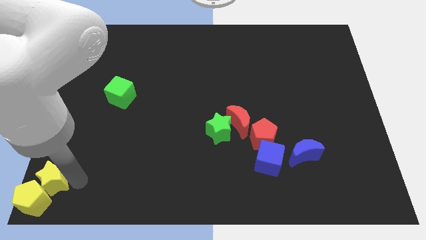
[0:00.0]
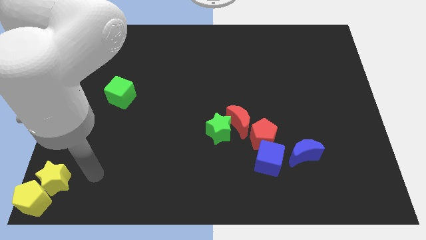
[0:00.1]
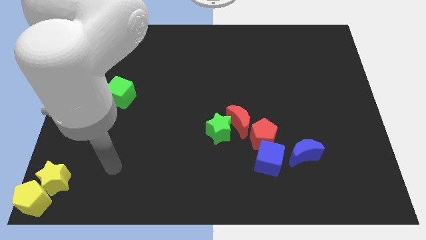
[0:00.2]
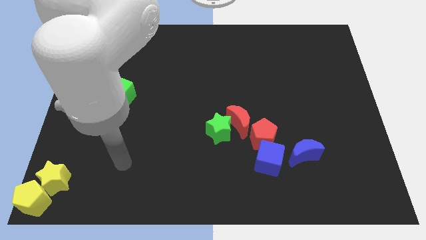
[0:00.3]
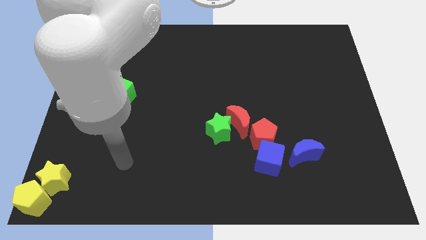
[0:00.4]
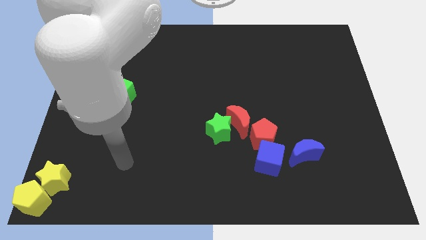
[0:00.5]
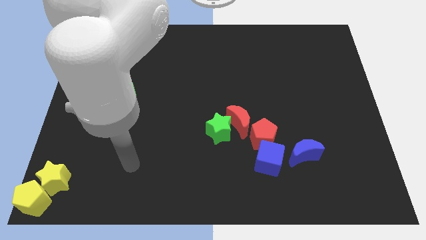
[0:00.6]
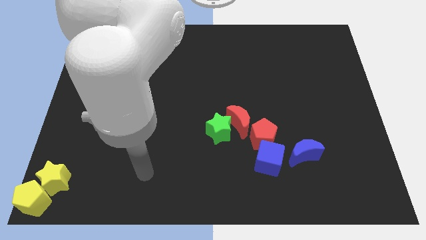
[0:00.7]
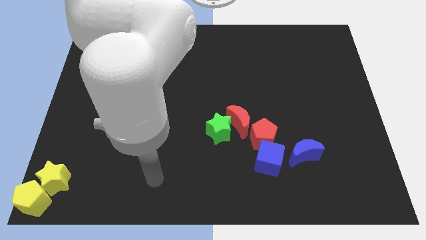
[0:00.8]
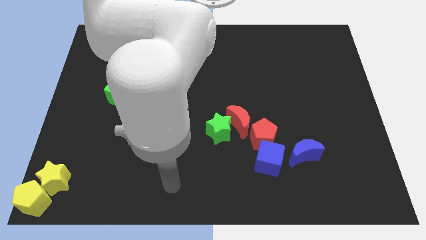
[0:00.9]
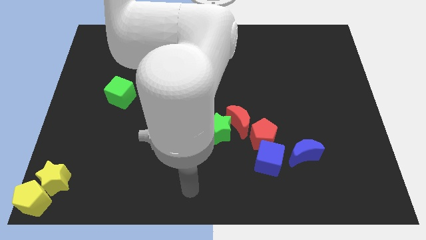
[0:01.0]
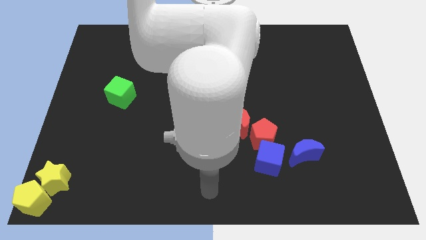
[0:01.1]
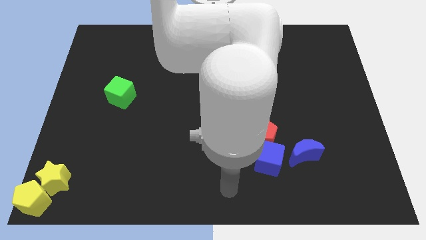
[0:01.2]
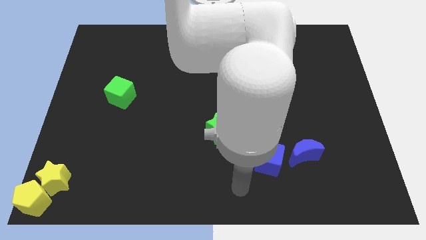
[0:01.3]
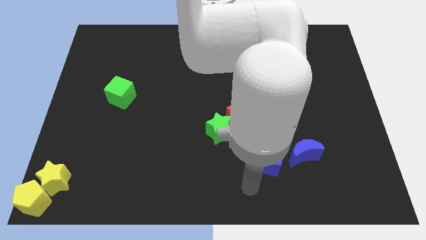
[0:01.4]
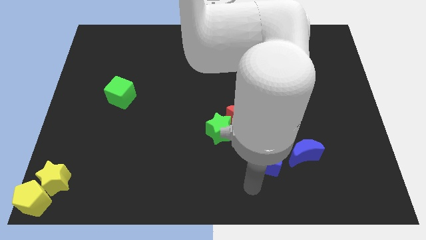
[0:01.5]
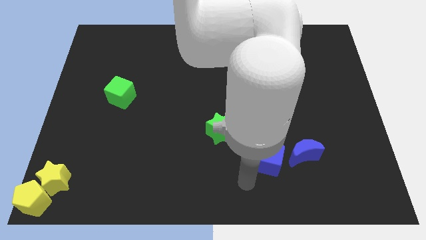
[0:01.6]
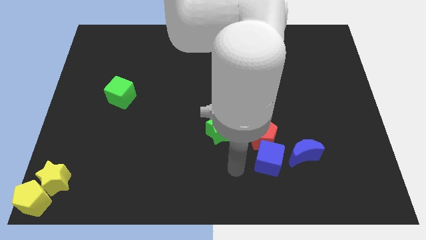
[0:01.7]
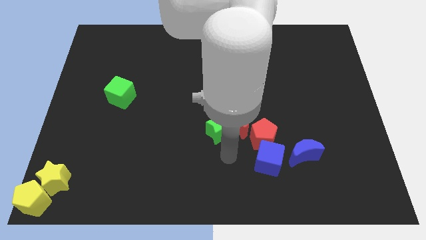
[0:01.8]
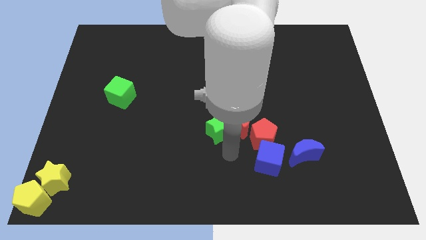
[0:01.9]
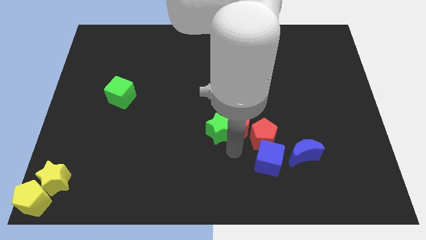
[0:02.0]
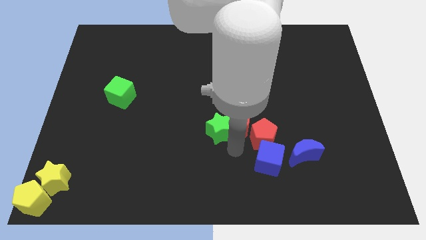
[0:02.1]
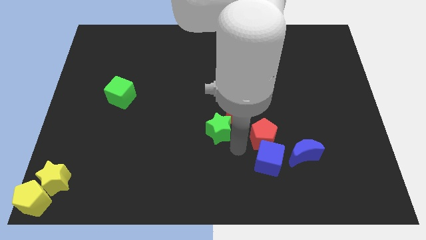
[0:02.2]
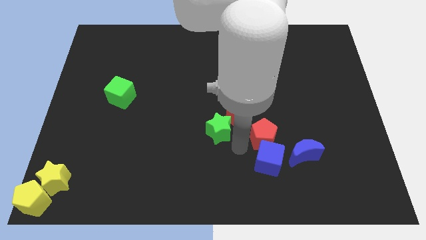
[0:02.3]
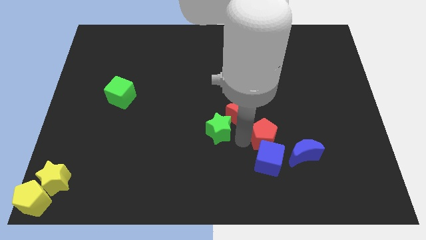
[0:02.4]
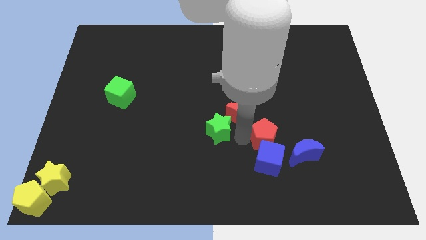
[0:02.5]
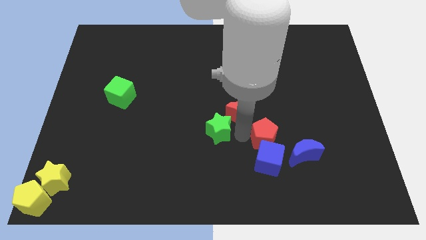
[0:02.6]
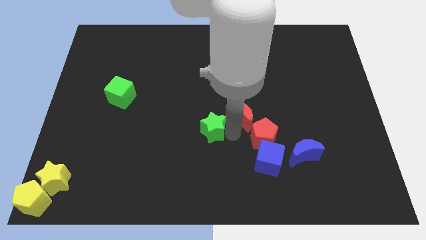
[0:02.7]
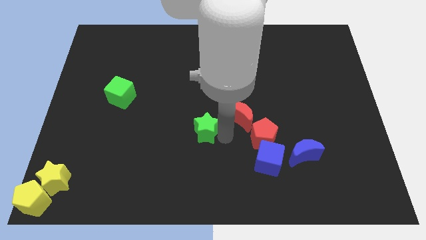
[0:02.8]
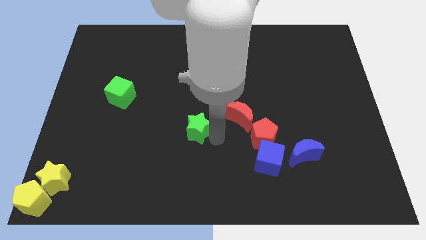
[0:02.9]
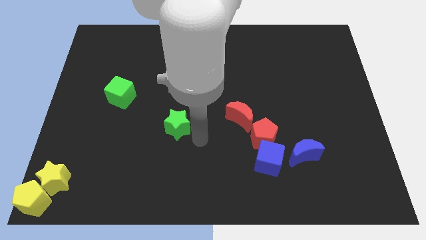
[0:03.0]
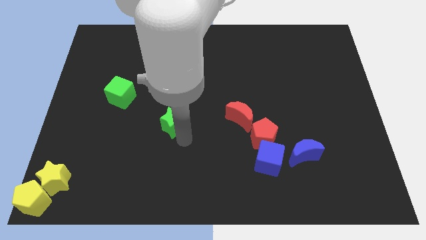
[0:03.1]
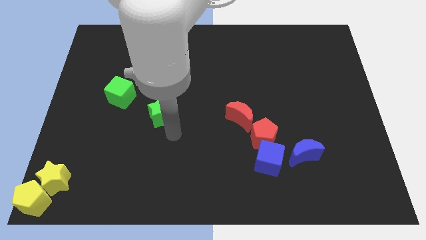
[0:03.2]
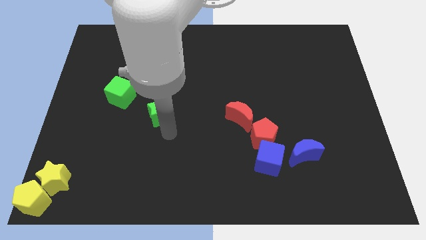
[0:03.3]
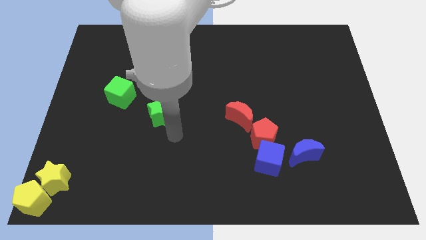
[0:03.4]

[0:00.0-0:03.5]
slide the green star slightly to the left

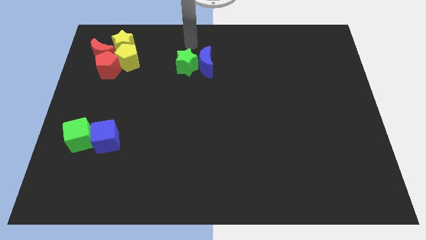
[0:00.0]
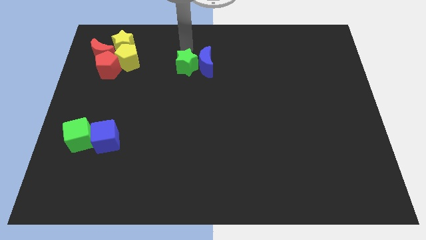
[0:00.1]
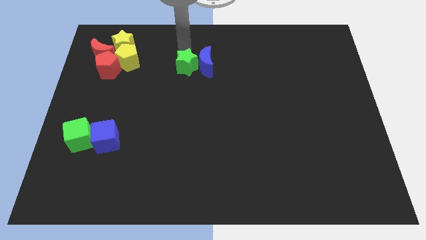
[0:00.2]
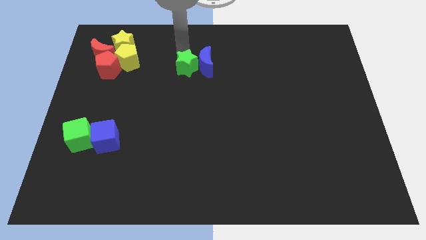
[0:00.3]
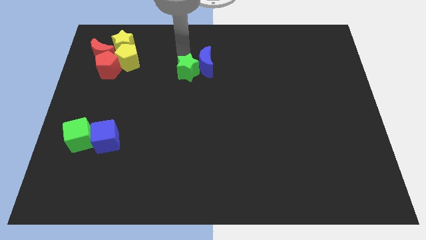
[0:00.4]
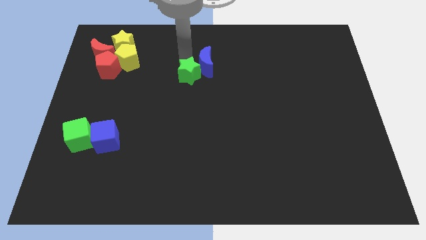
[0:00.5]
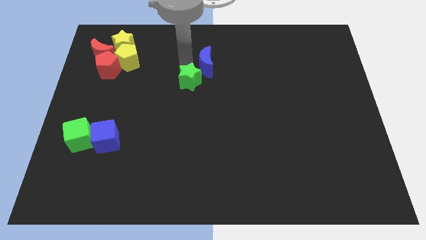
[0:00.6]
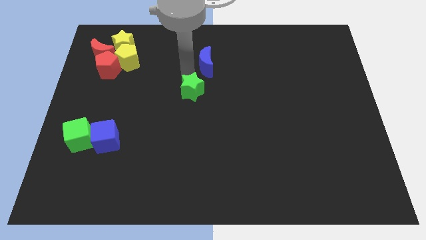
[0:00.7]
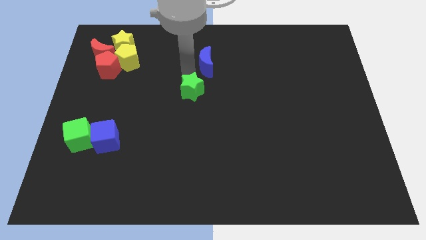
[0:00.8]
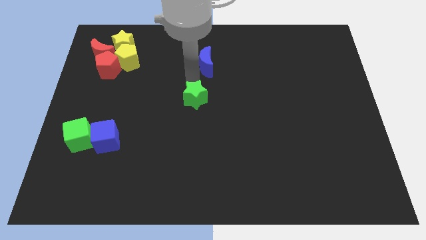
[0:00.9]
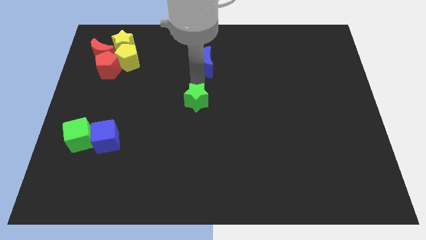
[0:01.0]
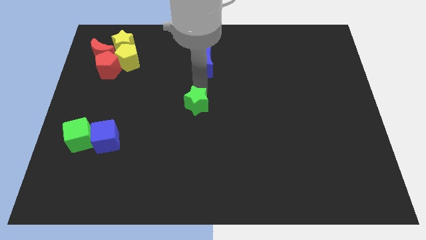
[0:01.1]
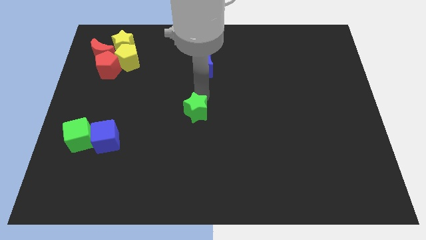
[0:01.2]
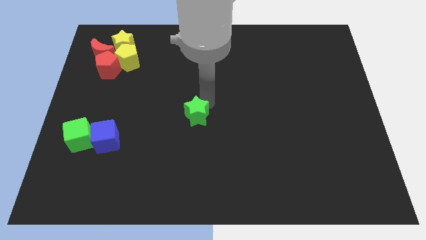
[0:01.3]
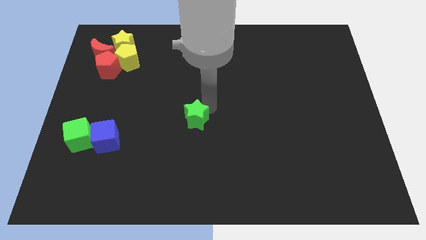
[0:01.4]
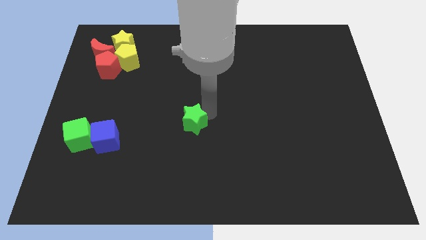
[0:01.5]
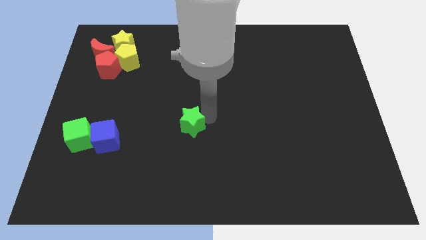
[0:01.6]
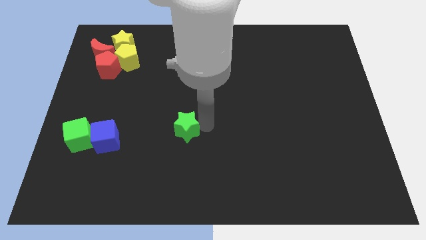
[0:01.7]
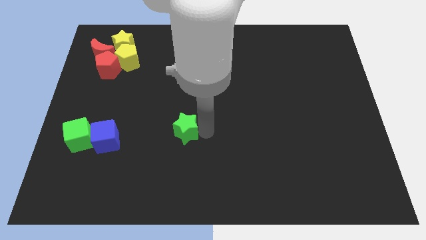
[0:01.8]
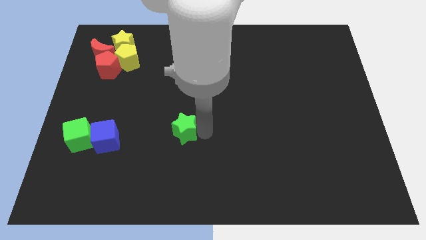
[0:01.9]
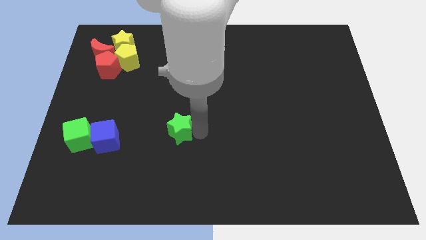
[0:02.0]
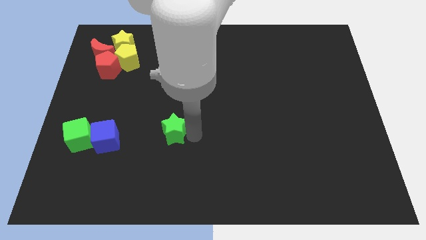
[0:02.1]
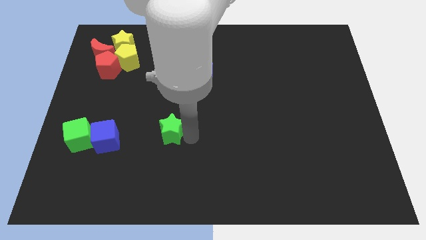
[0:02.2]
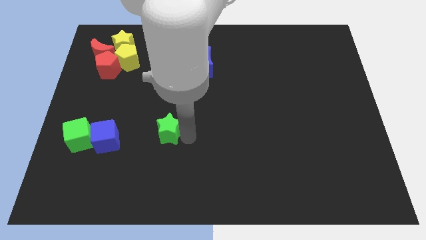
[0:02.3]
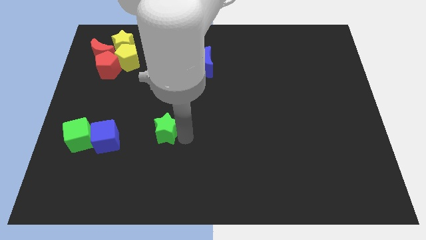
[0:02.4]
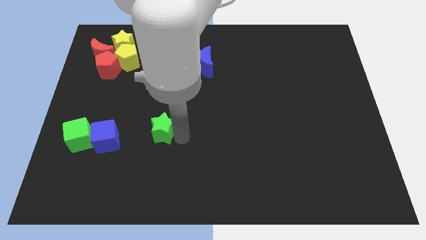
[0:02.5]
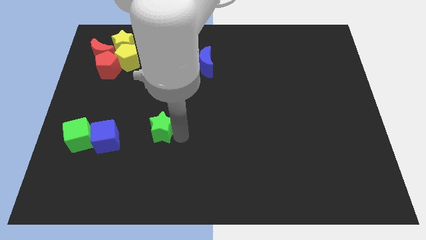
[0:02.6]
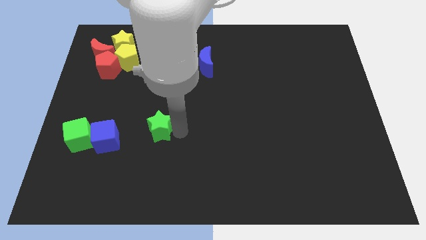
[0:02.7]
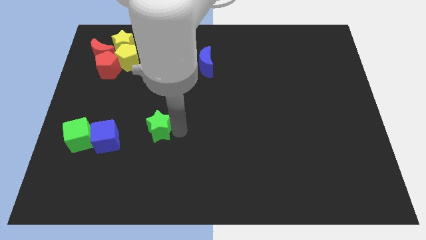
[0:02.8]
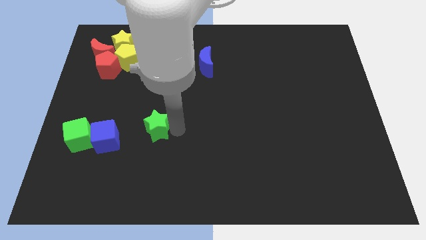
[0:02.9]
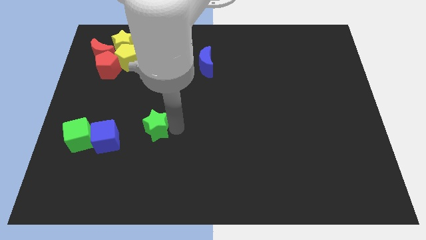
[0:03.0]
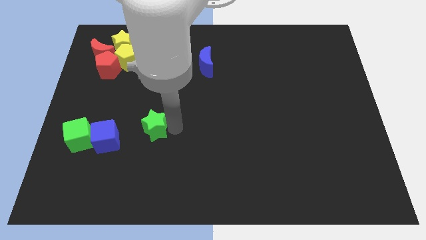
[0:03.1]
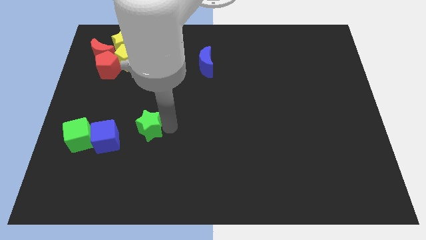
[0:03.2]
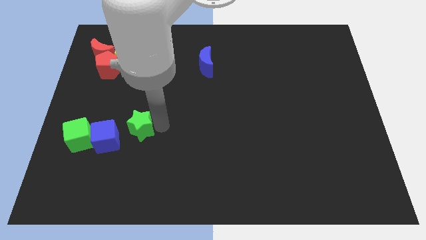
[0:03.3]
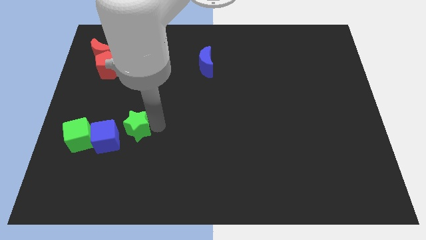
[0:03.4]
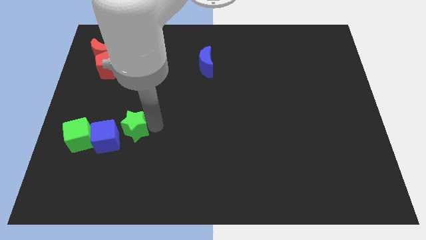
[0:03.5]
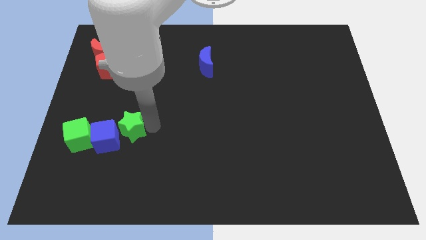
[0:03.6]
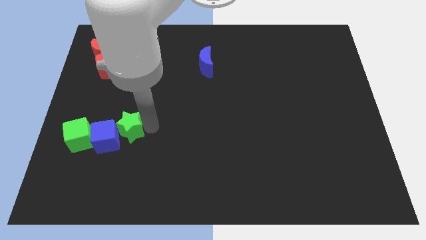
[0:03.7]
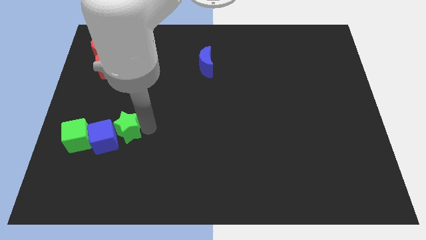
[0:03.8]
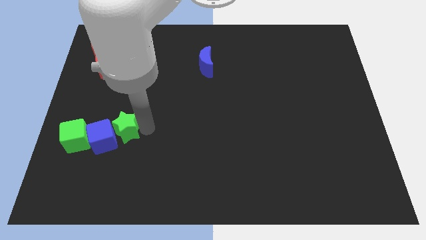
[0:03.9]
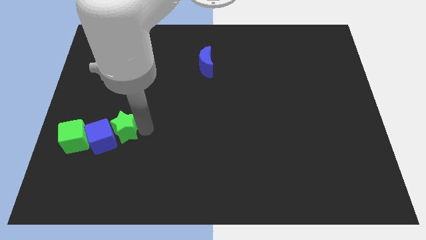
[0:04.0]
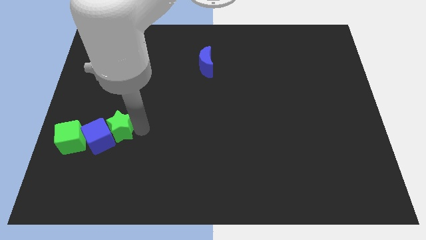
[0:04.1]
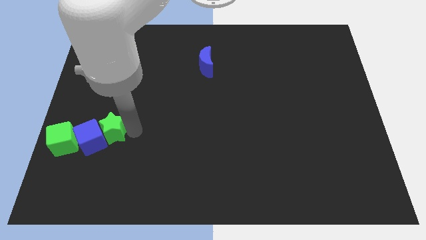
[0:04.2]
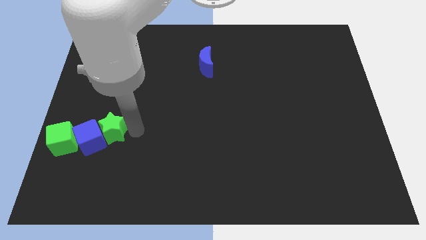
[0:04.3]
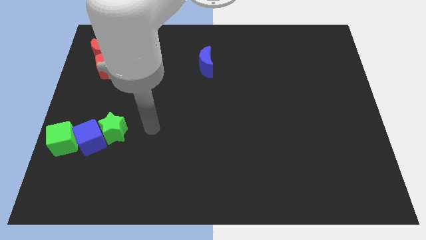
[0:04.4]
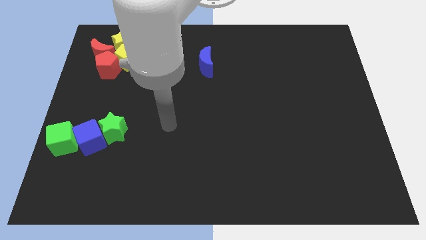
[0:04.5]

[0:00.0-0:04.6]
push the green star into the blue cube

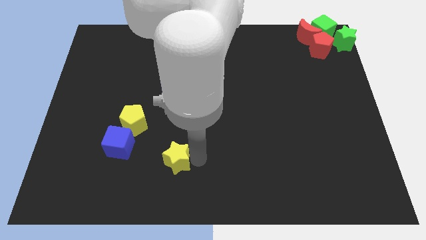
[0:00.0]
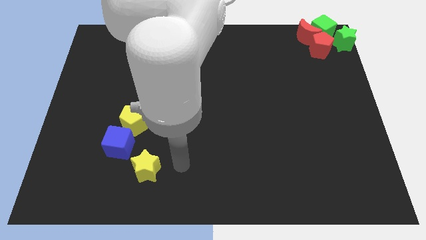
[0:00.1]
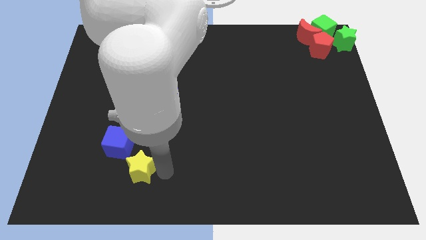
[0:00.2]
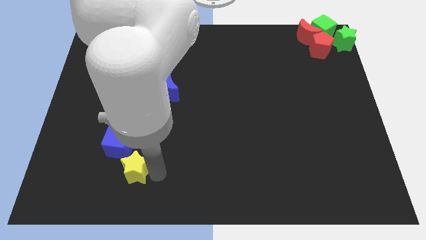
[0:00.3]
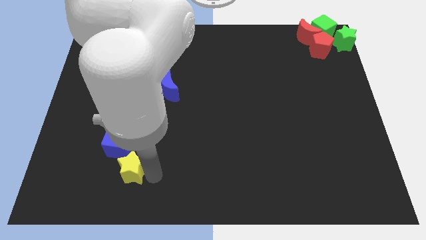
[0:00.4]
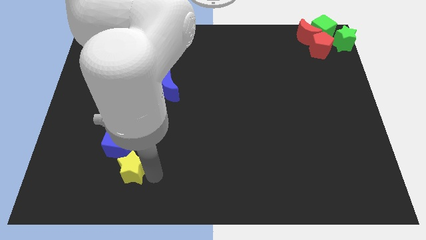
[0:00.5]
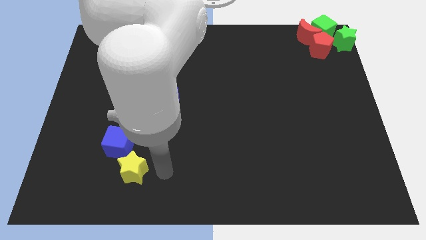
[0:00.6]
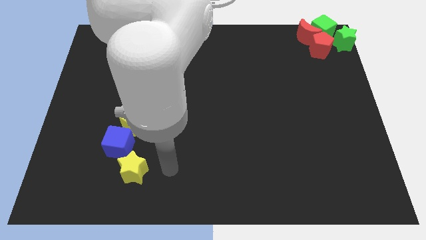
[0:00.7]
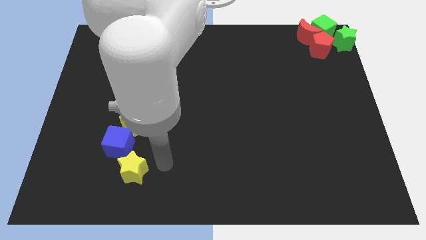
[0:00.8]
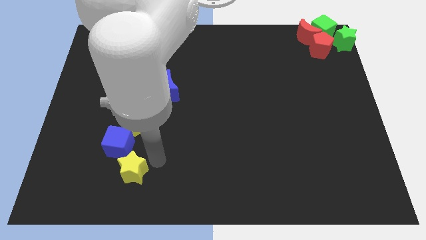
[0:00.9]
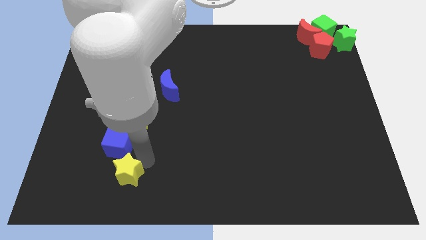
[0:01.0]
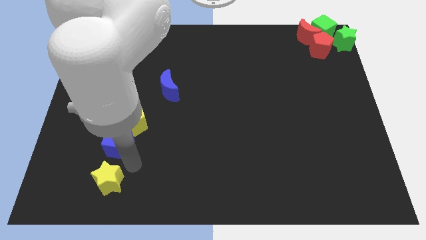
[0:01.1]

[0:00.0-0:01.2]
place the yellow star below the blue cube
